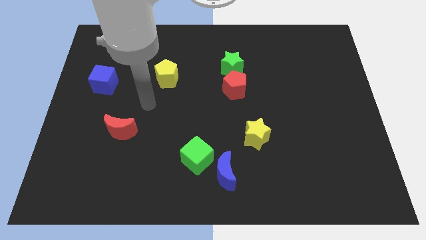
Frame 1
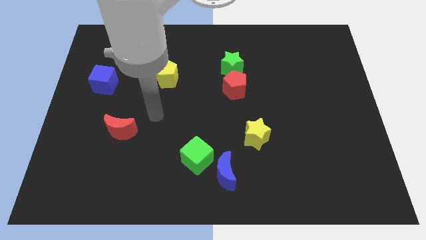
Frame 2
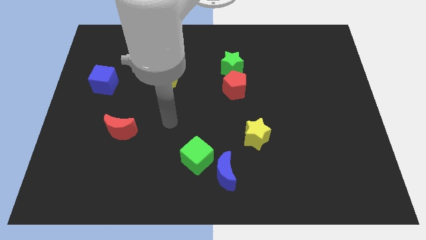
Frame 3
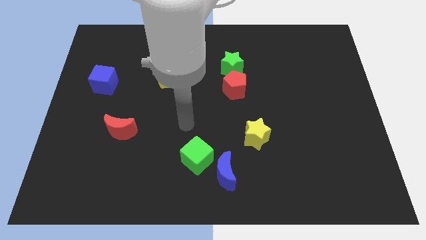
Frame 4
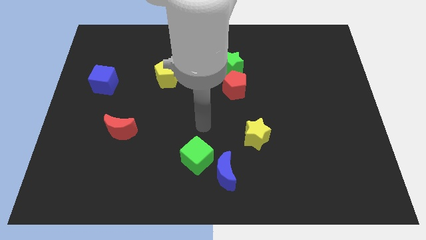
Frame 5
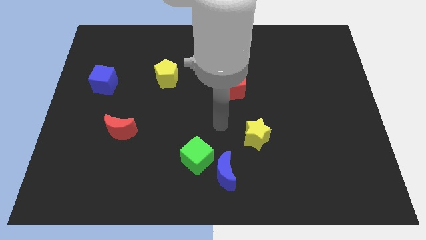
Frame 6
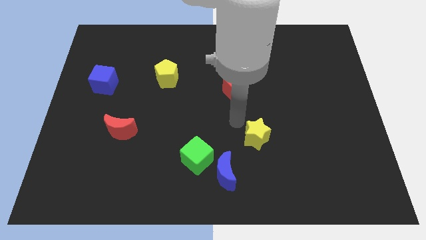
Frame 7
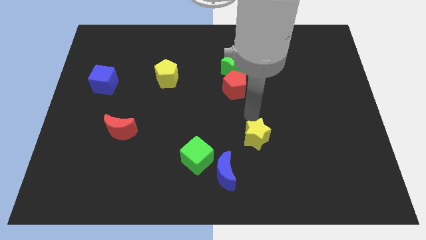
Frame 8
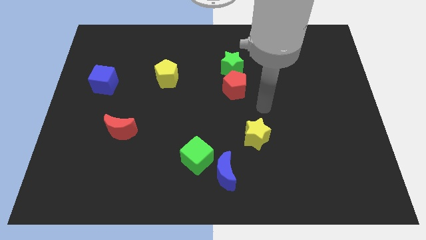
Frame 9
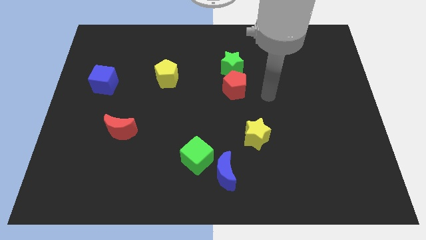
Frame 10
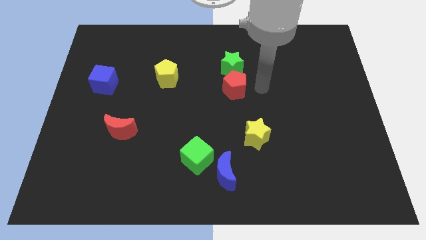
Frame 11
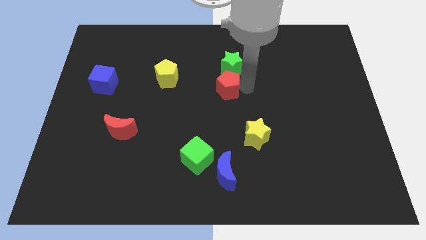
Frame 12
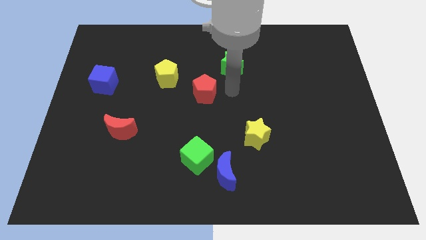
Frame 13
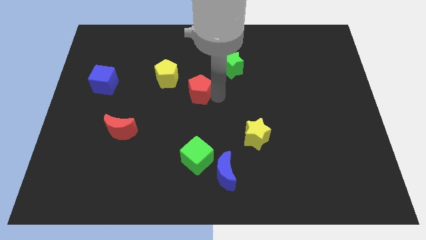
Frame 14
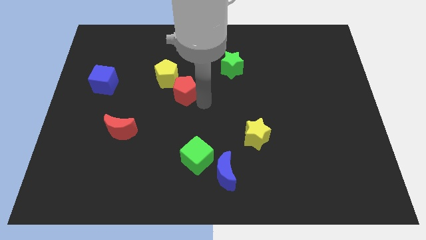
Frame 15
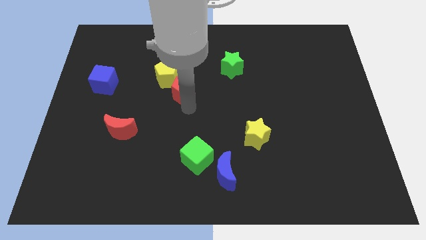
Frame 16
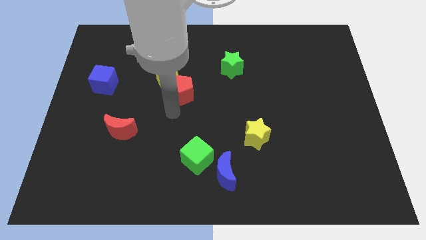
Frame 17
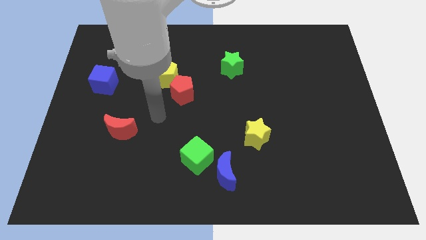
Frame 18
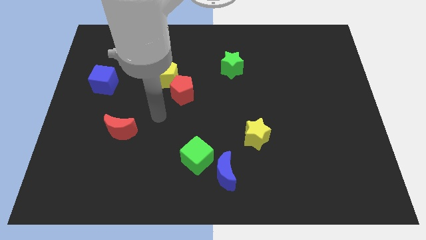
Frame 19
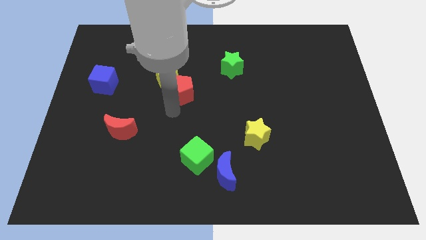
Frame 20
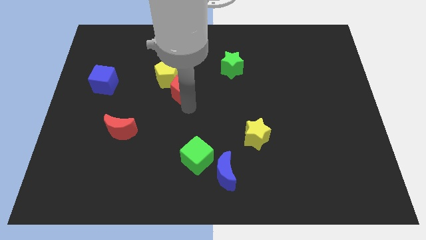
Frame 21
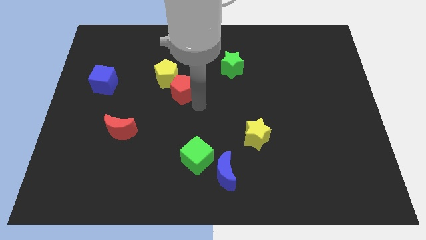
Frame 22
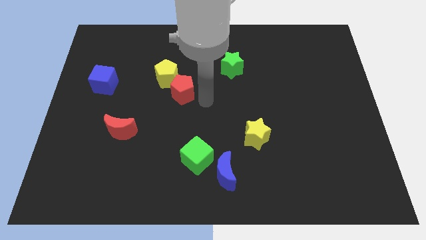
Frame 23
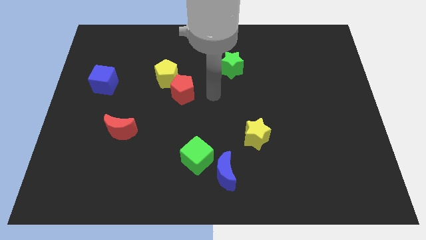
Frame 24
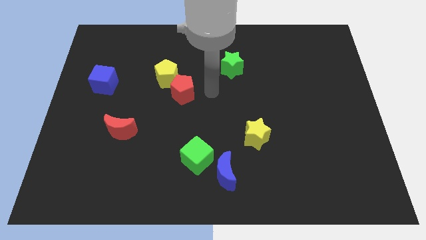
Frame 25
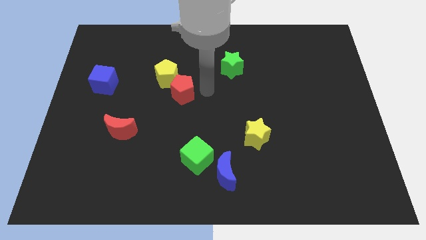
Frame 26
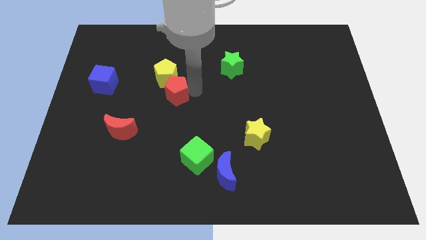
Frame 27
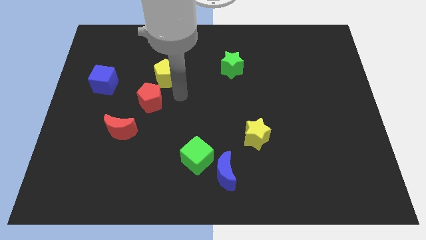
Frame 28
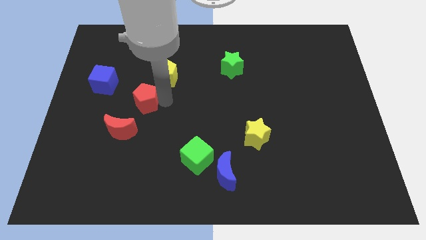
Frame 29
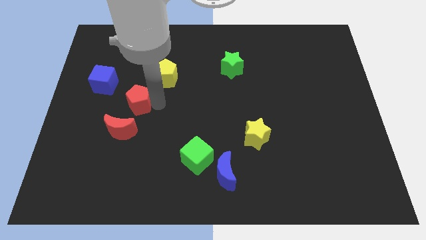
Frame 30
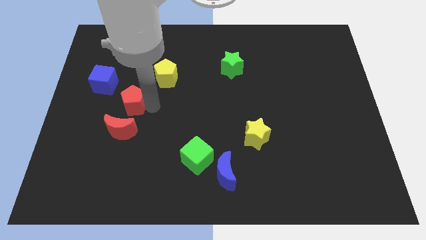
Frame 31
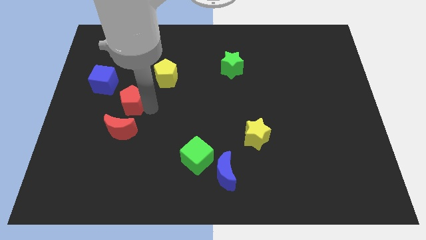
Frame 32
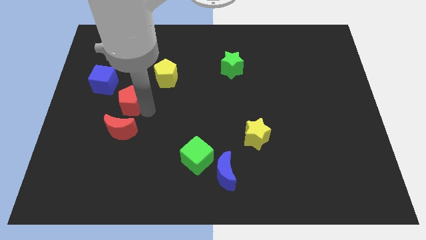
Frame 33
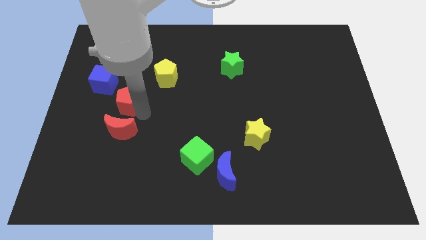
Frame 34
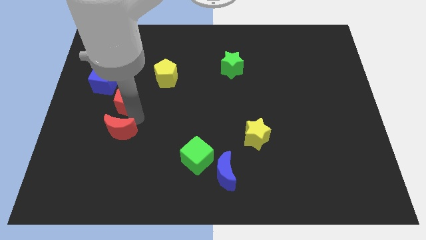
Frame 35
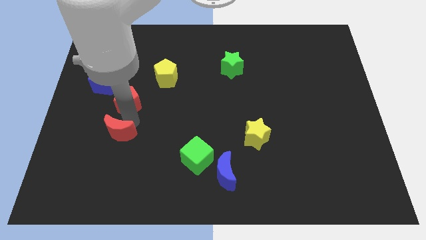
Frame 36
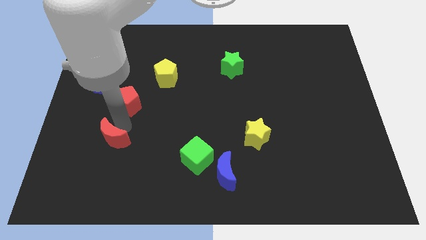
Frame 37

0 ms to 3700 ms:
place the red pentagon in between the yellow pentagon and red moon

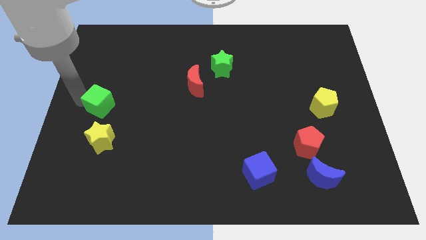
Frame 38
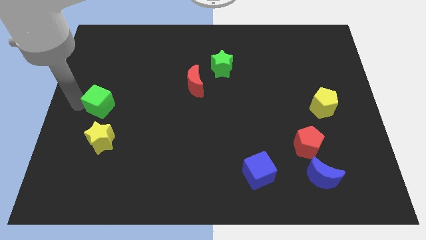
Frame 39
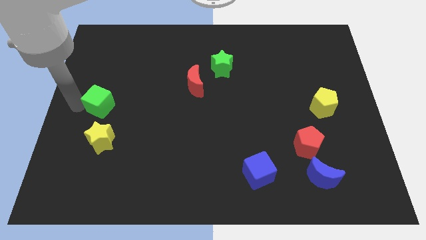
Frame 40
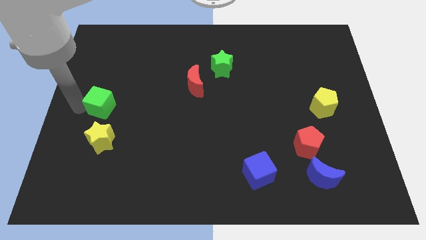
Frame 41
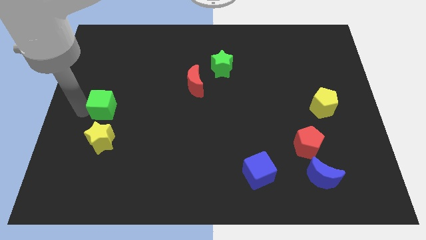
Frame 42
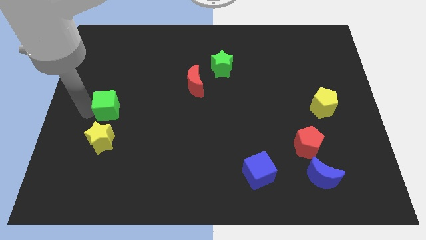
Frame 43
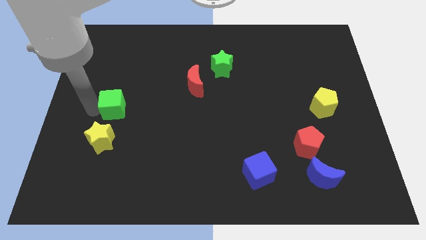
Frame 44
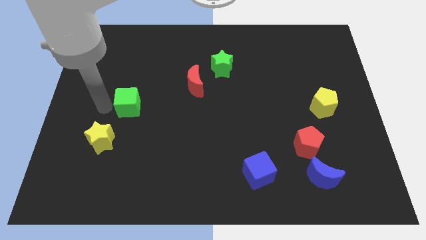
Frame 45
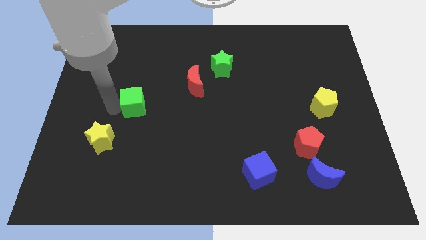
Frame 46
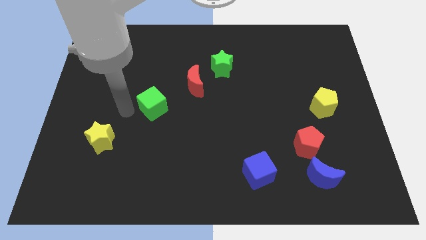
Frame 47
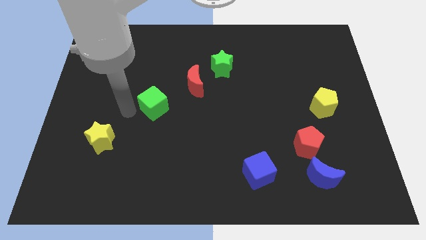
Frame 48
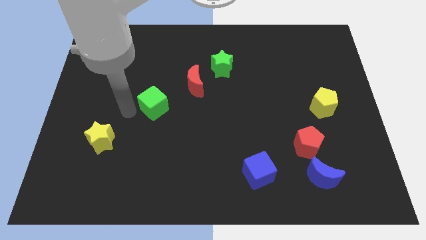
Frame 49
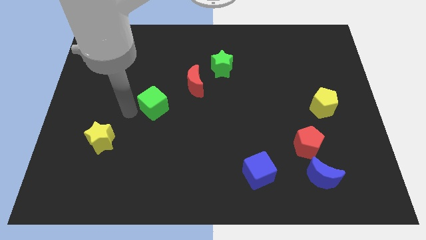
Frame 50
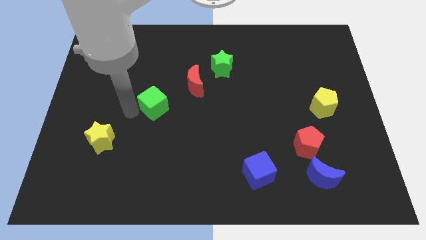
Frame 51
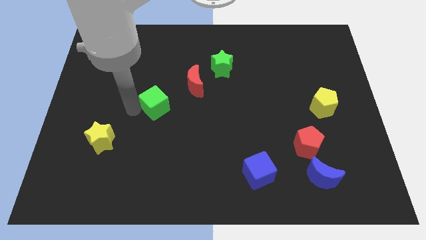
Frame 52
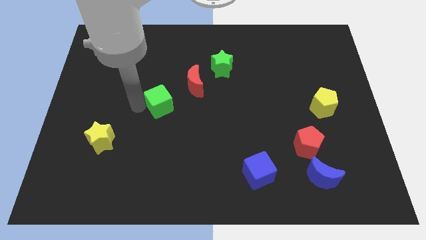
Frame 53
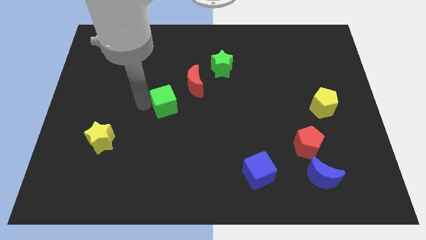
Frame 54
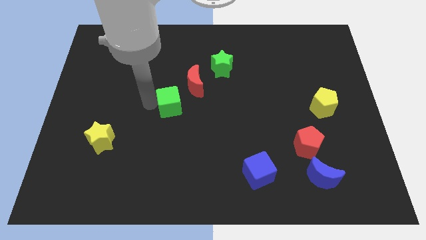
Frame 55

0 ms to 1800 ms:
push the green cube to the bottom left of the red crescent

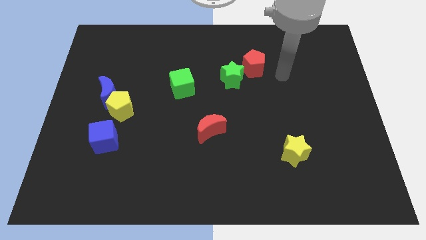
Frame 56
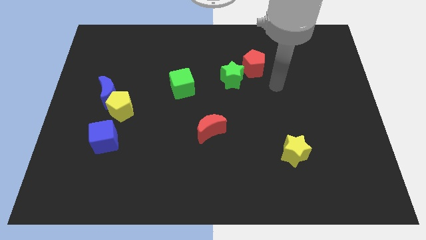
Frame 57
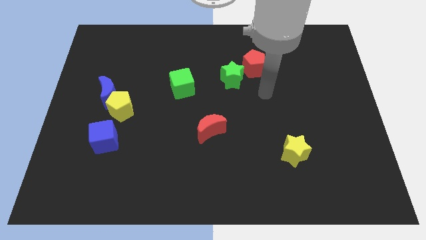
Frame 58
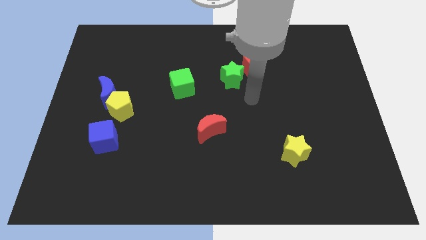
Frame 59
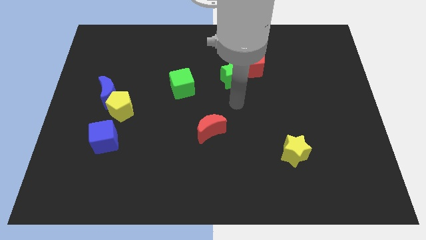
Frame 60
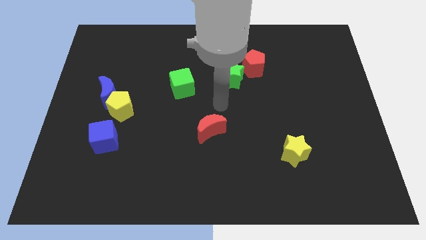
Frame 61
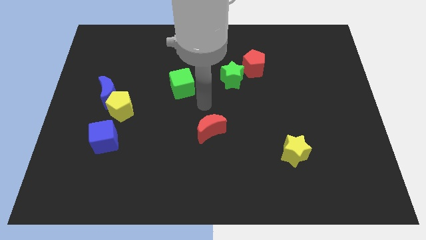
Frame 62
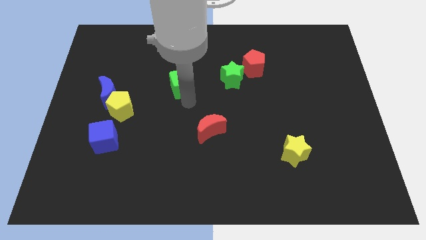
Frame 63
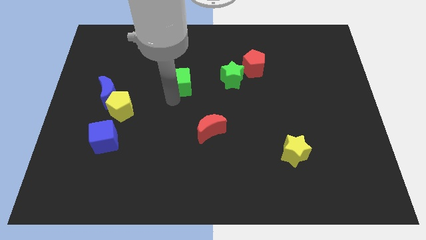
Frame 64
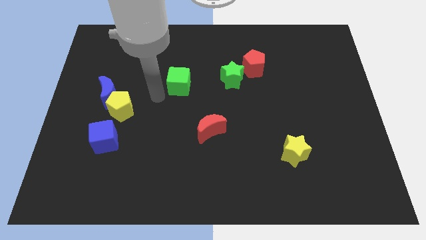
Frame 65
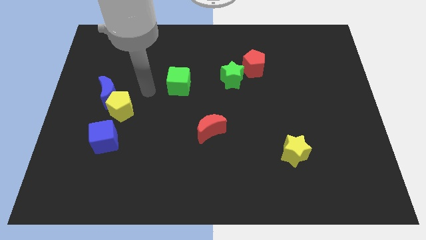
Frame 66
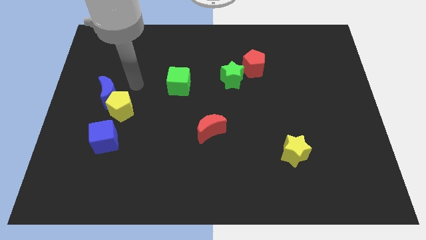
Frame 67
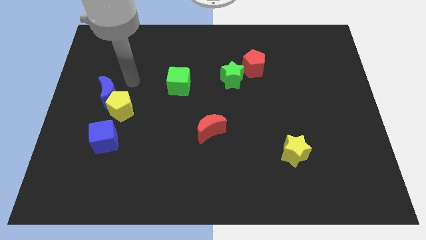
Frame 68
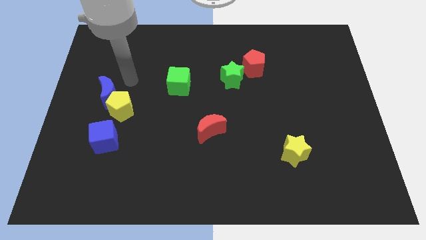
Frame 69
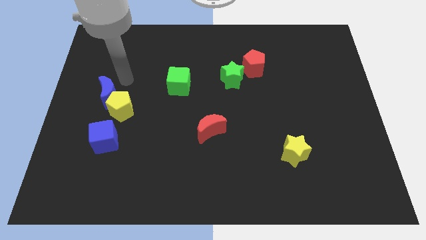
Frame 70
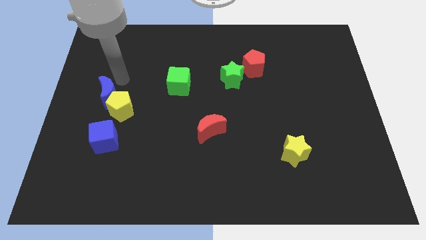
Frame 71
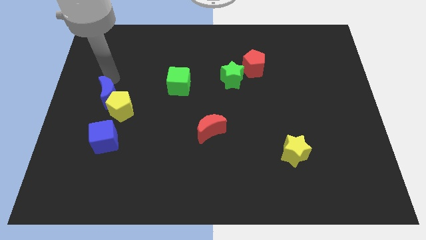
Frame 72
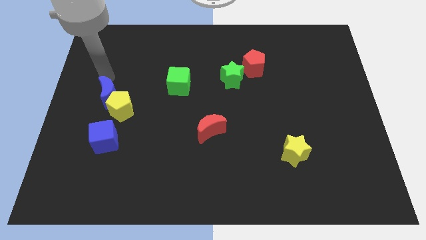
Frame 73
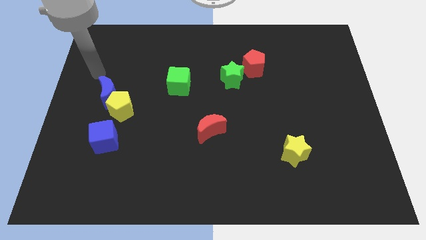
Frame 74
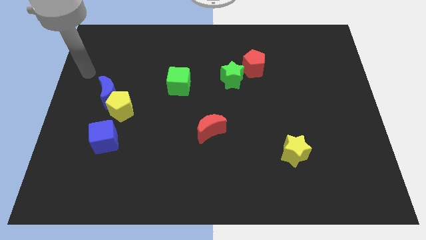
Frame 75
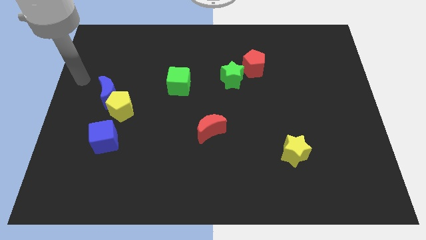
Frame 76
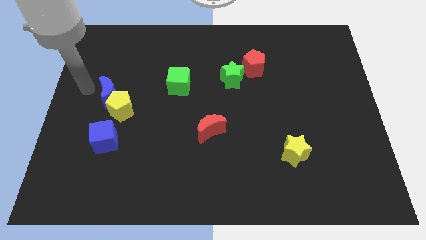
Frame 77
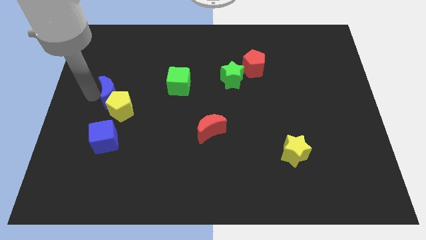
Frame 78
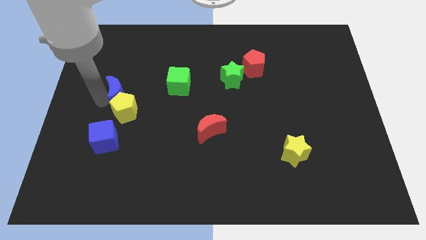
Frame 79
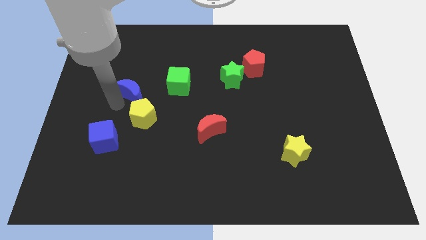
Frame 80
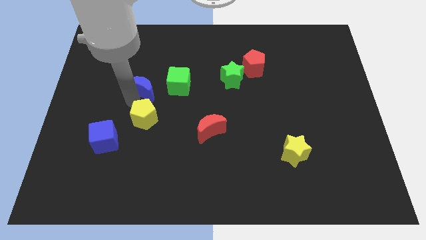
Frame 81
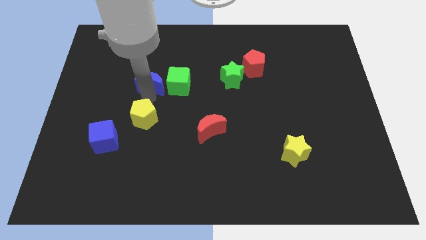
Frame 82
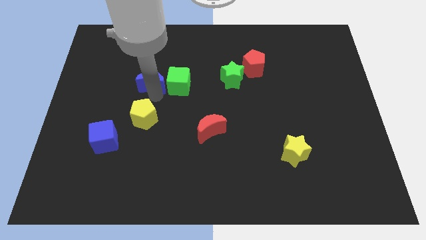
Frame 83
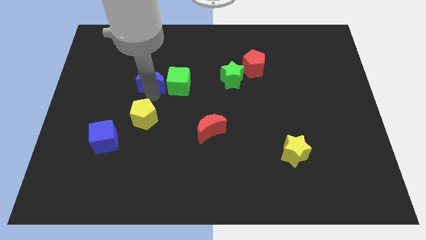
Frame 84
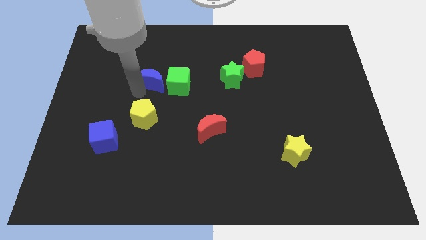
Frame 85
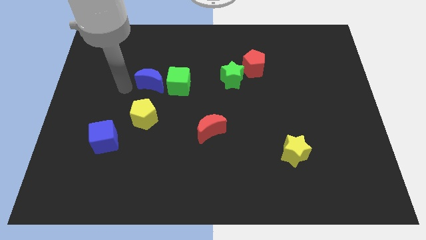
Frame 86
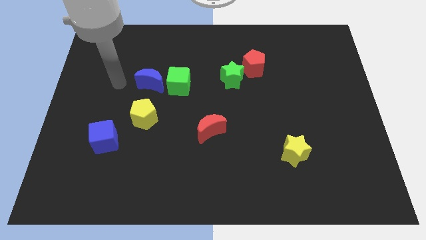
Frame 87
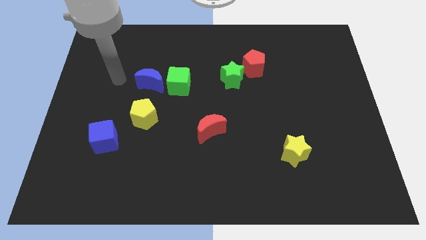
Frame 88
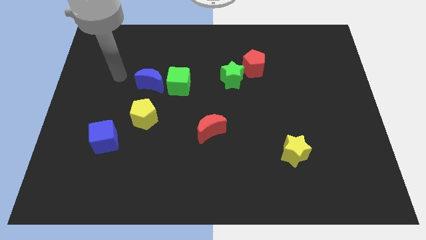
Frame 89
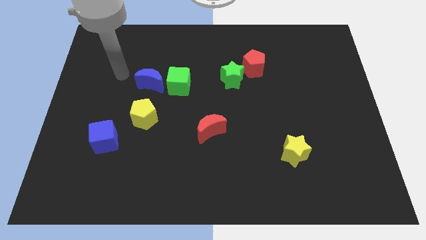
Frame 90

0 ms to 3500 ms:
slide the yellow pentagon below the blue moon
